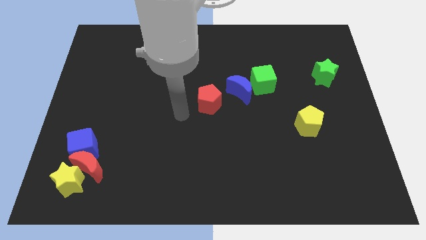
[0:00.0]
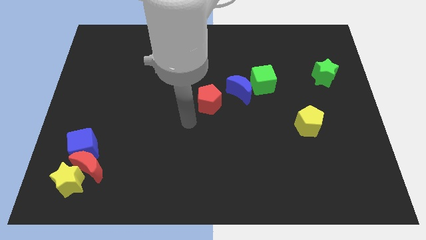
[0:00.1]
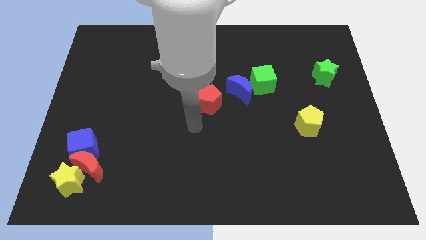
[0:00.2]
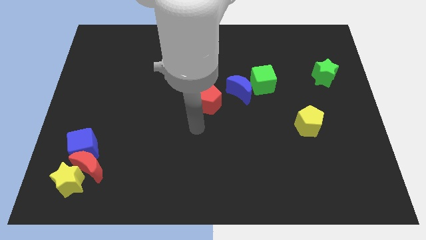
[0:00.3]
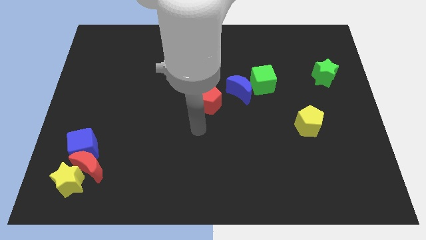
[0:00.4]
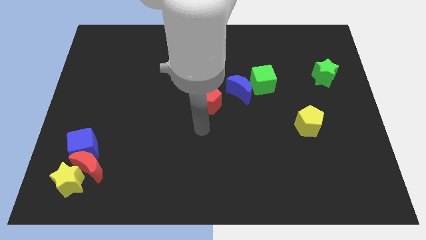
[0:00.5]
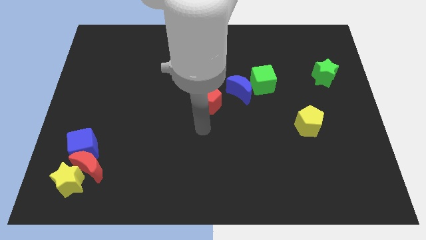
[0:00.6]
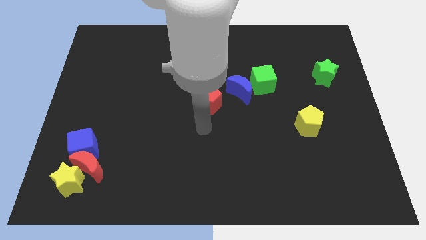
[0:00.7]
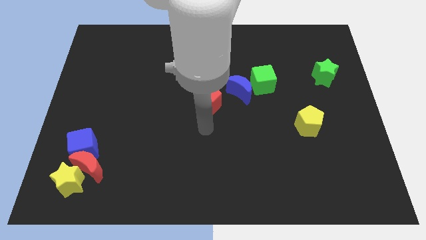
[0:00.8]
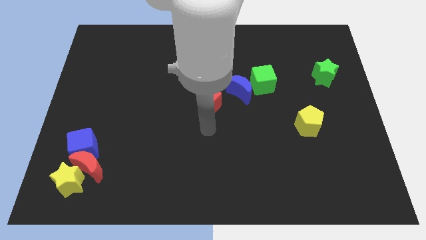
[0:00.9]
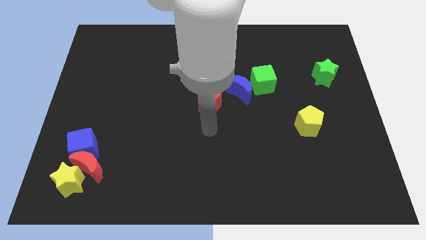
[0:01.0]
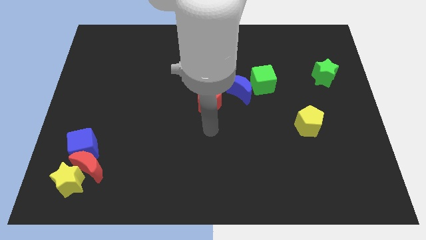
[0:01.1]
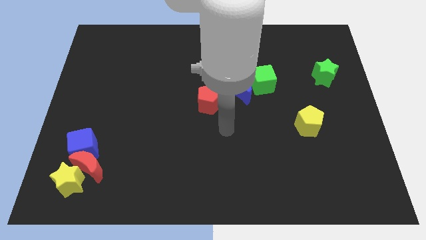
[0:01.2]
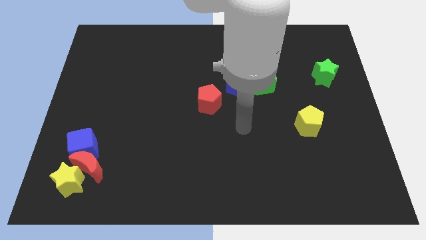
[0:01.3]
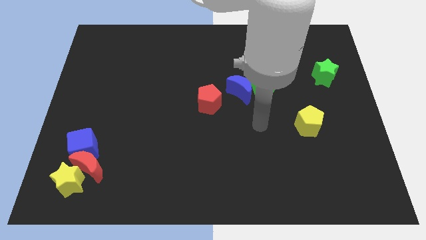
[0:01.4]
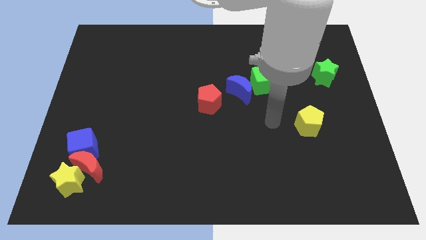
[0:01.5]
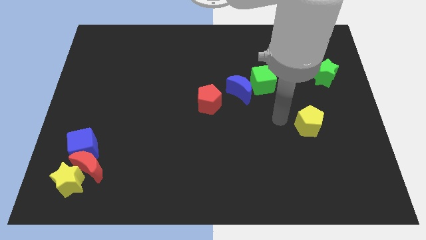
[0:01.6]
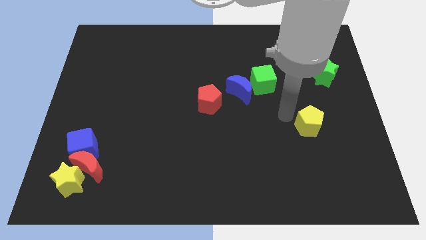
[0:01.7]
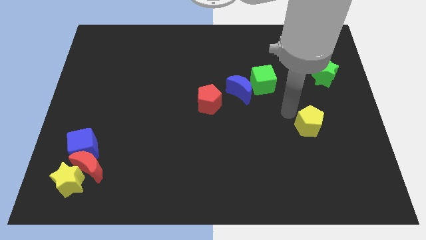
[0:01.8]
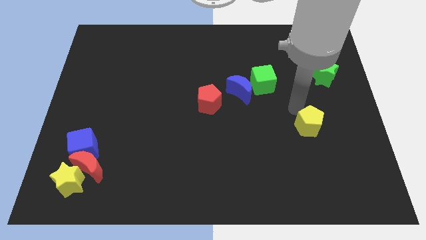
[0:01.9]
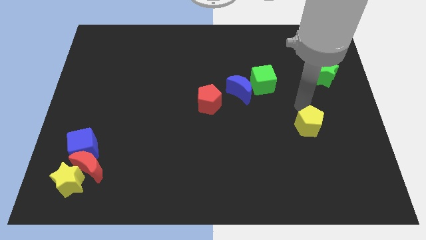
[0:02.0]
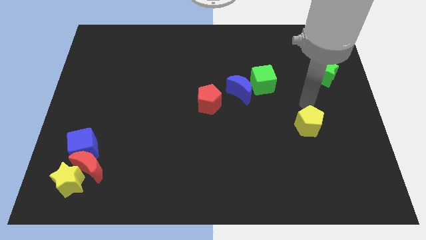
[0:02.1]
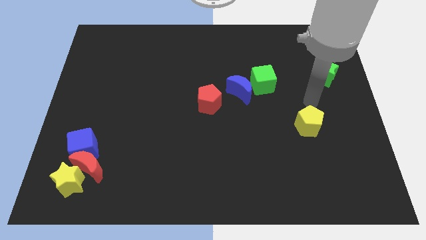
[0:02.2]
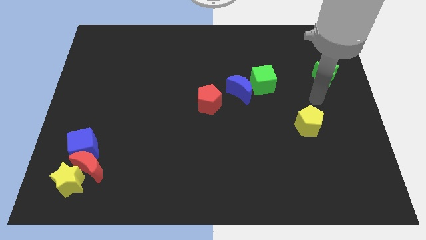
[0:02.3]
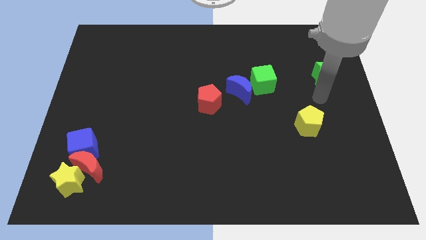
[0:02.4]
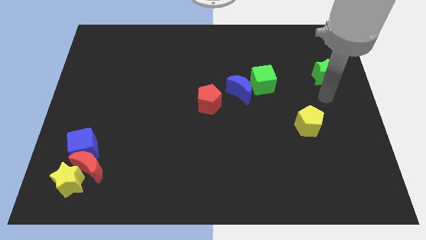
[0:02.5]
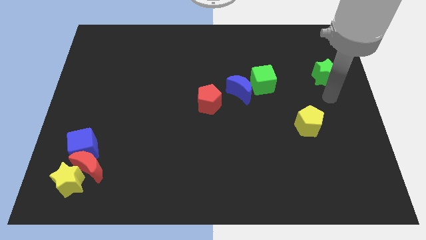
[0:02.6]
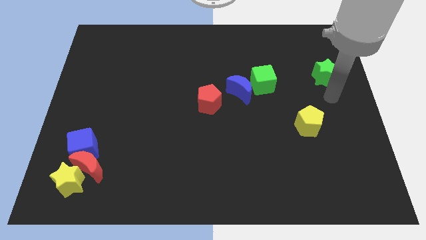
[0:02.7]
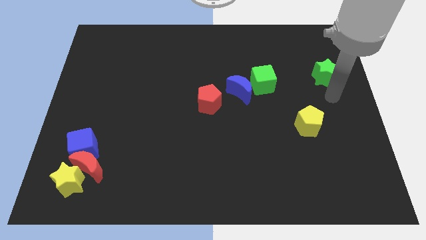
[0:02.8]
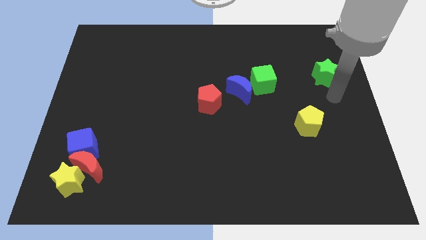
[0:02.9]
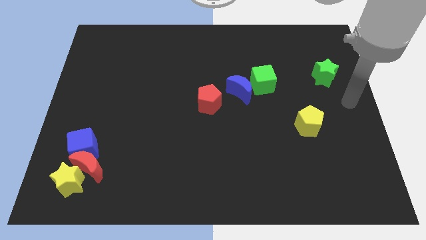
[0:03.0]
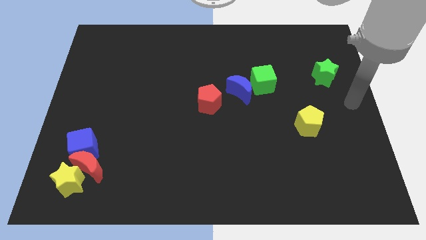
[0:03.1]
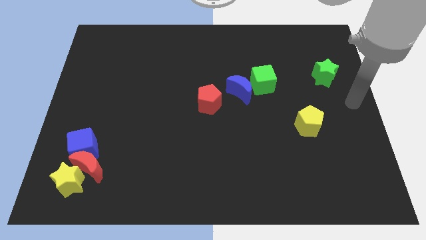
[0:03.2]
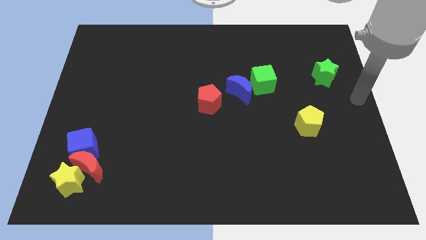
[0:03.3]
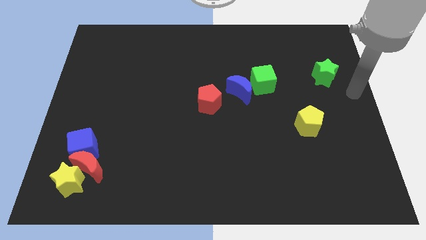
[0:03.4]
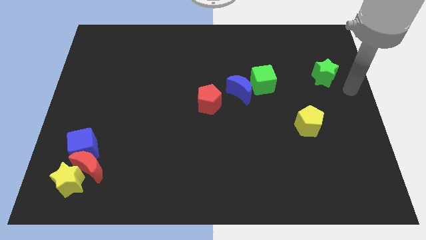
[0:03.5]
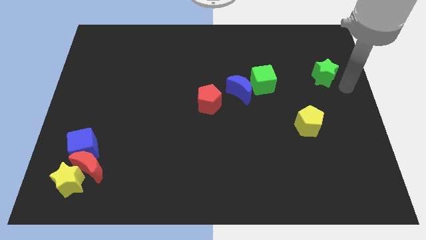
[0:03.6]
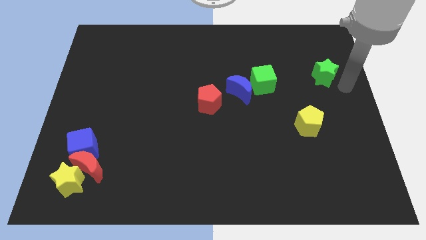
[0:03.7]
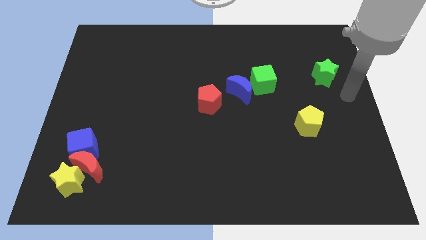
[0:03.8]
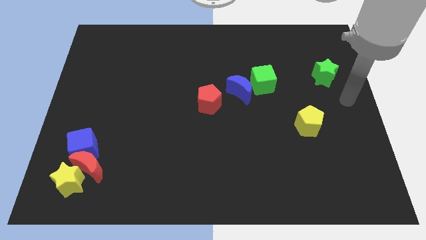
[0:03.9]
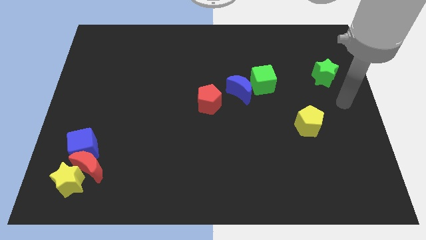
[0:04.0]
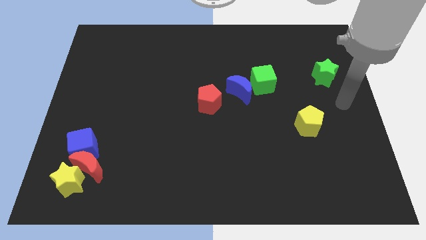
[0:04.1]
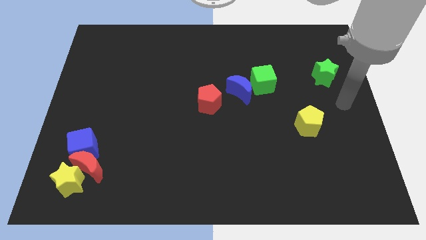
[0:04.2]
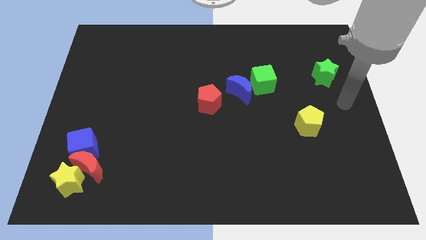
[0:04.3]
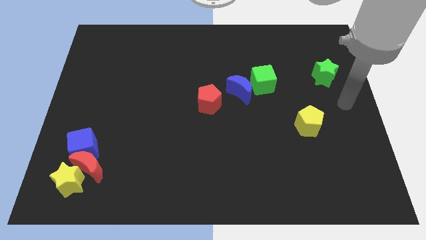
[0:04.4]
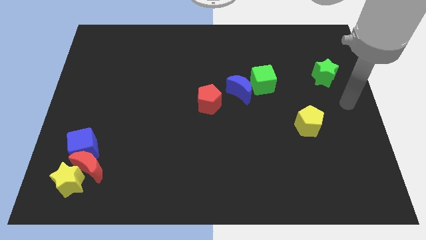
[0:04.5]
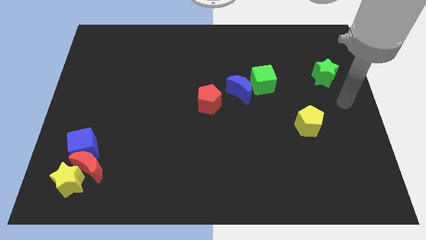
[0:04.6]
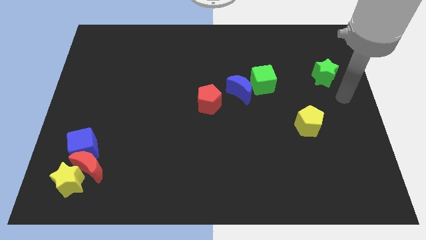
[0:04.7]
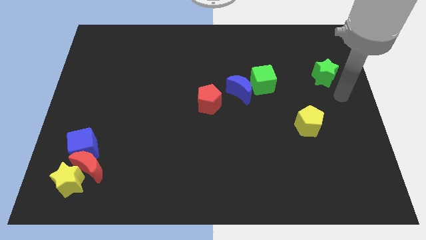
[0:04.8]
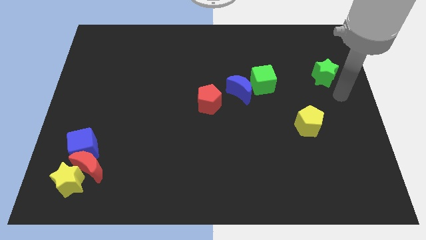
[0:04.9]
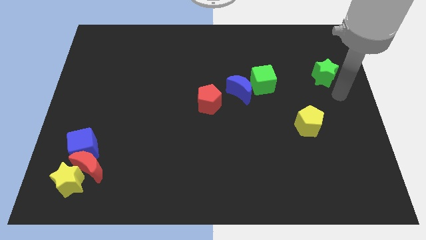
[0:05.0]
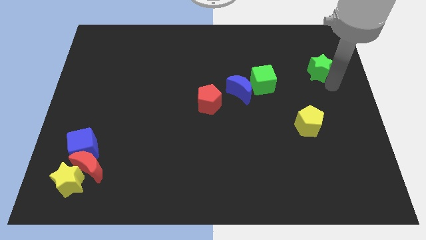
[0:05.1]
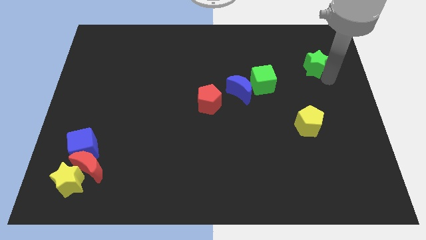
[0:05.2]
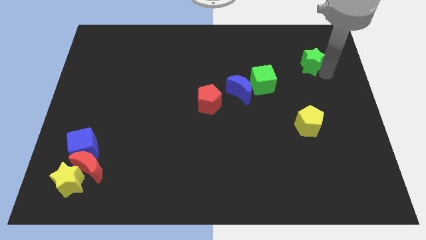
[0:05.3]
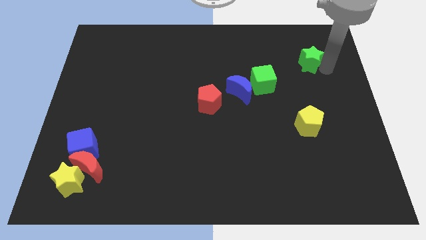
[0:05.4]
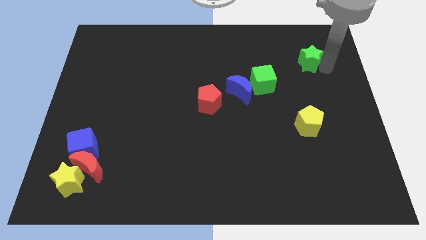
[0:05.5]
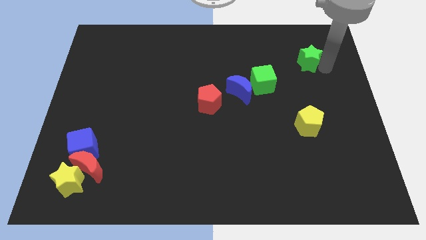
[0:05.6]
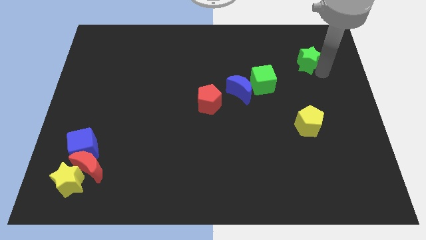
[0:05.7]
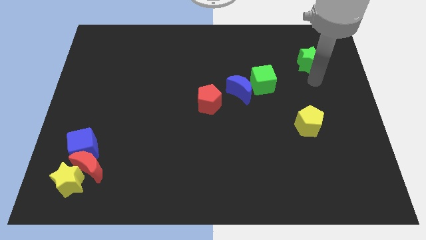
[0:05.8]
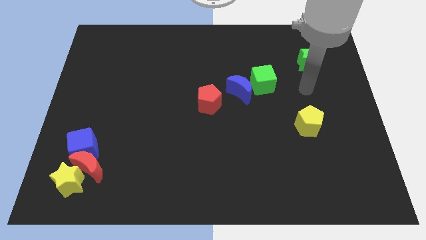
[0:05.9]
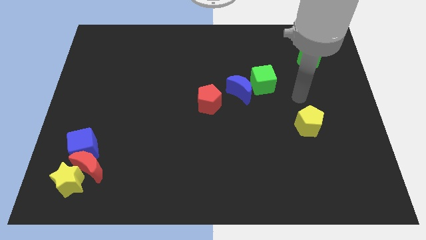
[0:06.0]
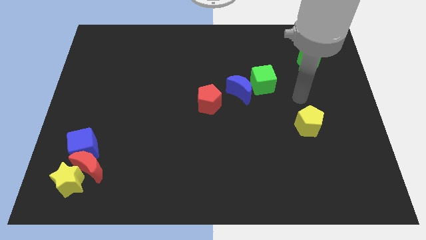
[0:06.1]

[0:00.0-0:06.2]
push the green star upward

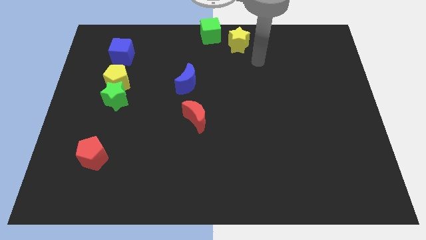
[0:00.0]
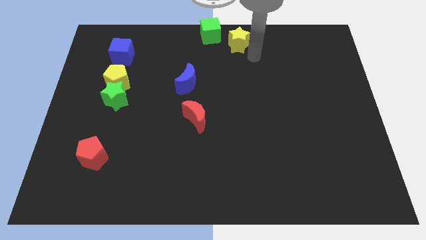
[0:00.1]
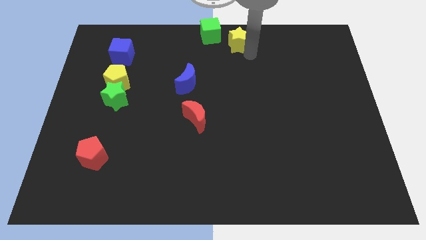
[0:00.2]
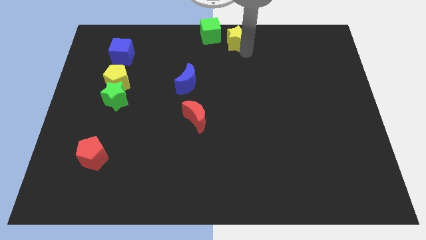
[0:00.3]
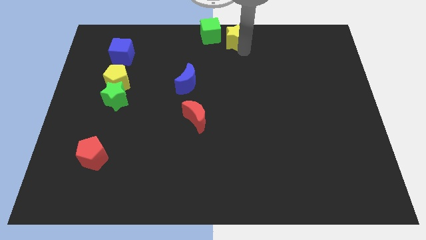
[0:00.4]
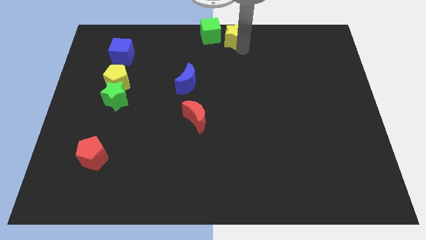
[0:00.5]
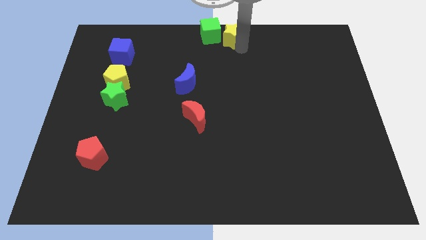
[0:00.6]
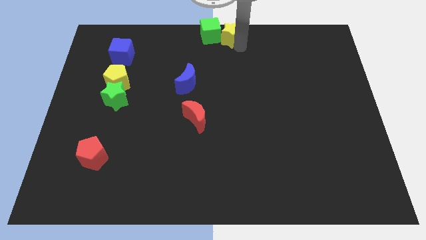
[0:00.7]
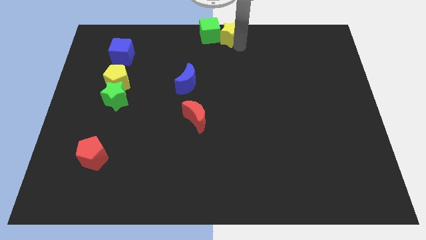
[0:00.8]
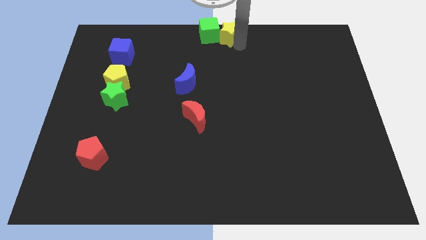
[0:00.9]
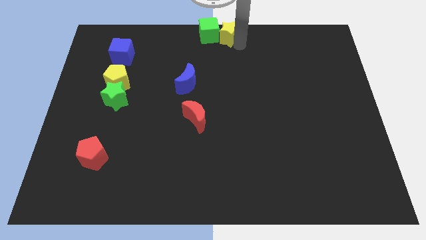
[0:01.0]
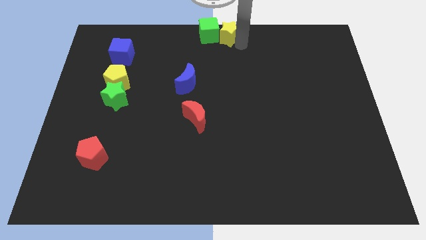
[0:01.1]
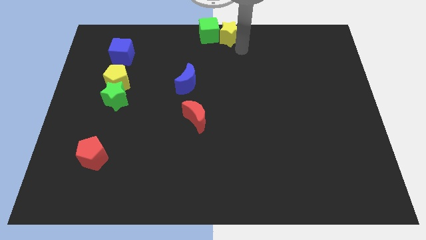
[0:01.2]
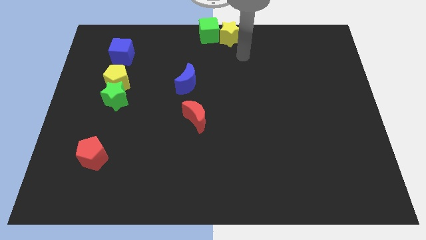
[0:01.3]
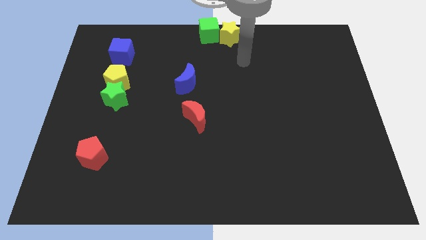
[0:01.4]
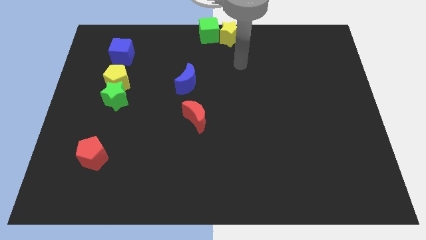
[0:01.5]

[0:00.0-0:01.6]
push teh green cube with the help of the yellow star on top center of the board

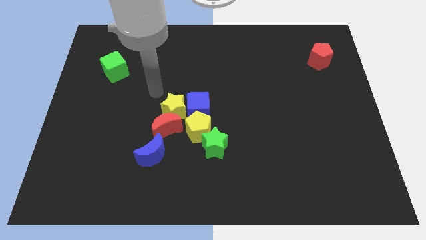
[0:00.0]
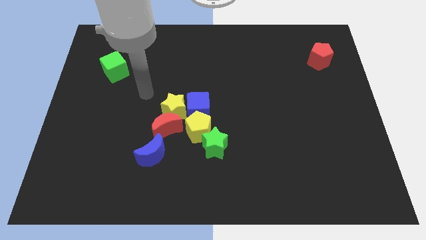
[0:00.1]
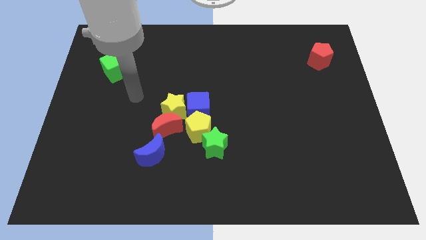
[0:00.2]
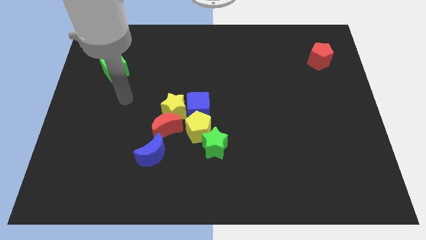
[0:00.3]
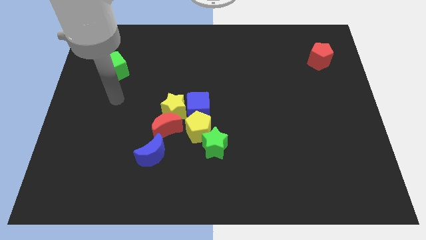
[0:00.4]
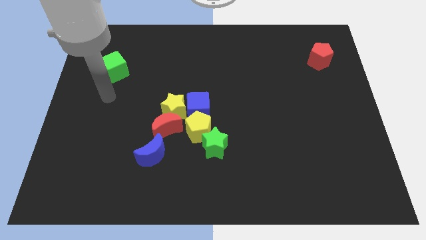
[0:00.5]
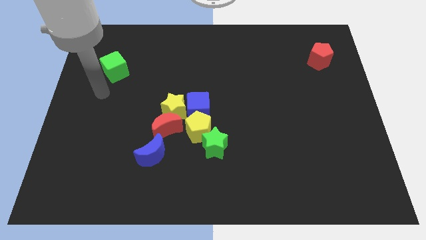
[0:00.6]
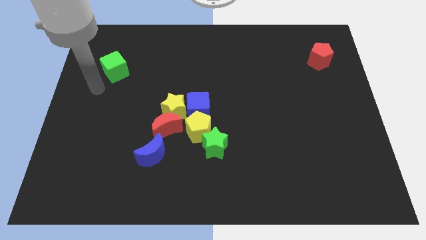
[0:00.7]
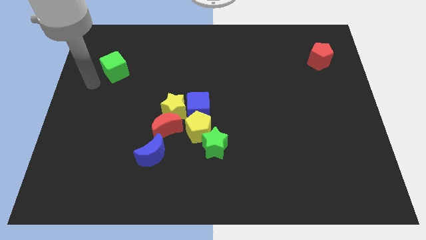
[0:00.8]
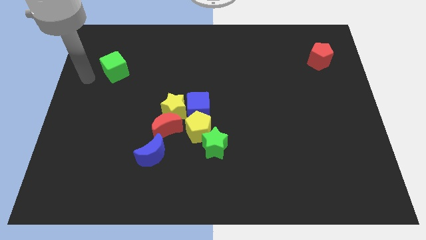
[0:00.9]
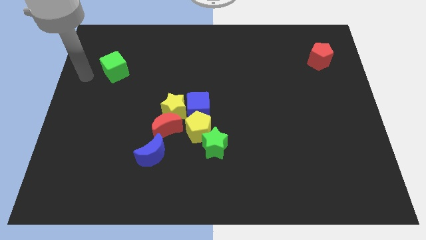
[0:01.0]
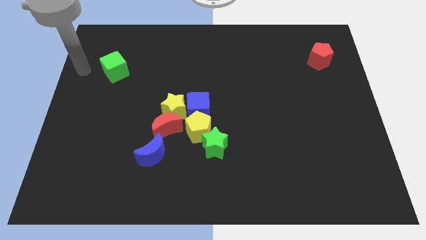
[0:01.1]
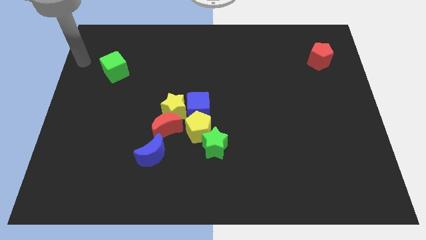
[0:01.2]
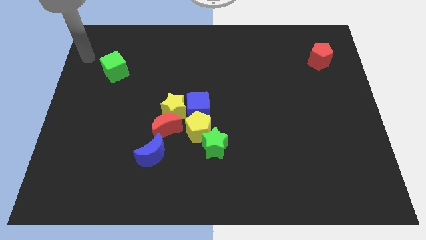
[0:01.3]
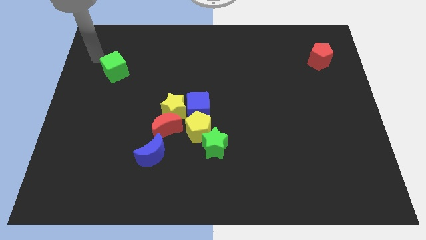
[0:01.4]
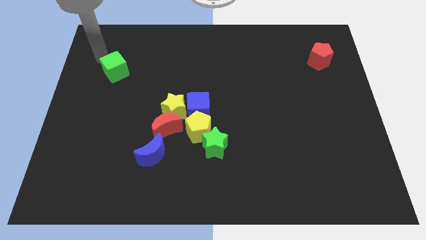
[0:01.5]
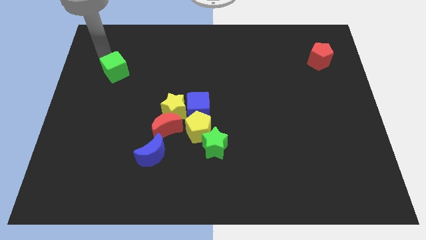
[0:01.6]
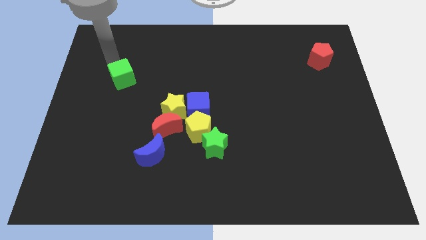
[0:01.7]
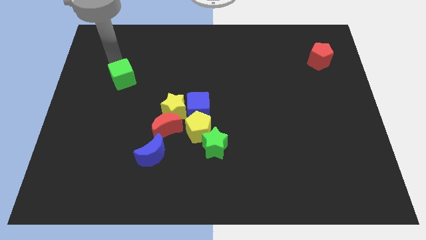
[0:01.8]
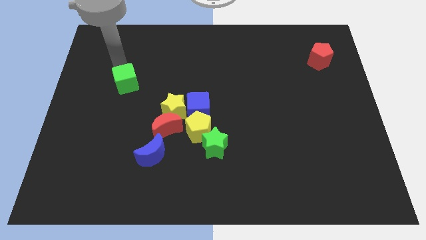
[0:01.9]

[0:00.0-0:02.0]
move the green cube towards the yellow star
